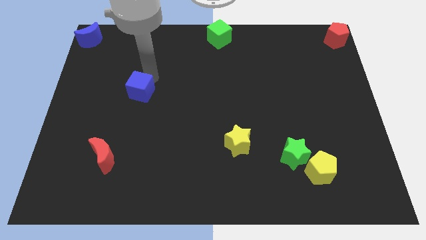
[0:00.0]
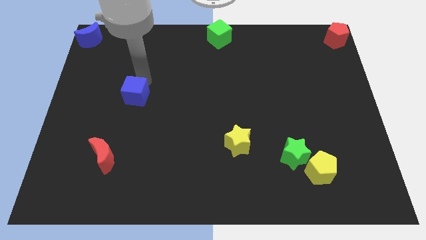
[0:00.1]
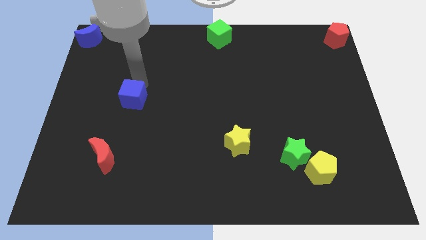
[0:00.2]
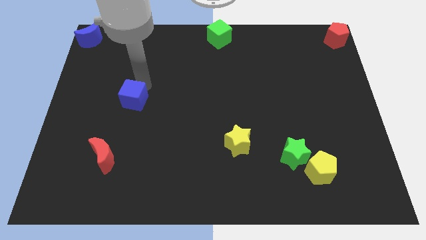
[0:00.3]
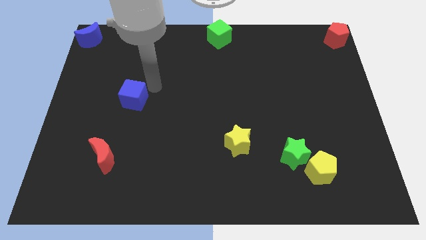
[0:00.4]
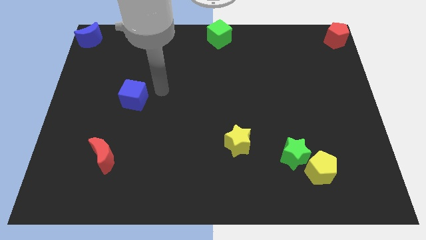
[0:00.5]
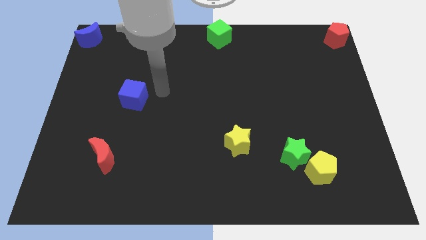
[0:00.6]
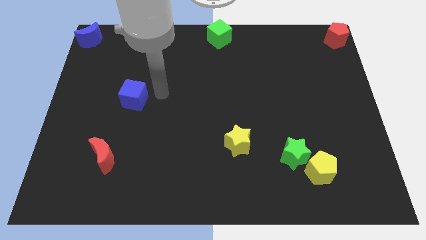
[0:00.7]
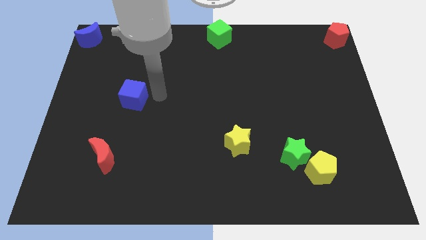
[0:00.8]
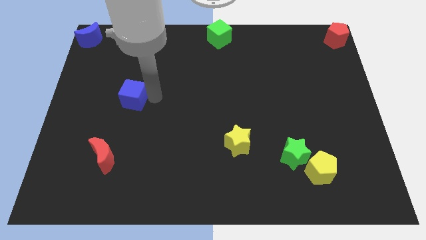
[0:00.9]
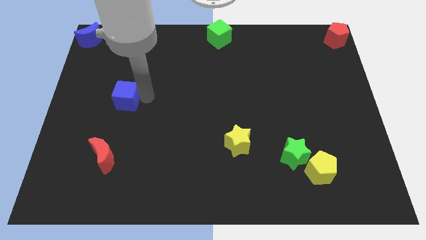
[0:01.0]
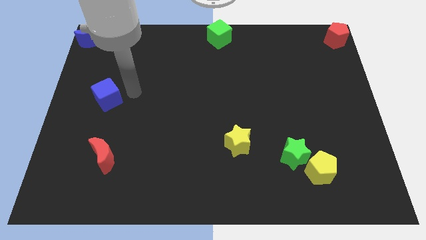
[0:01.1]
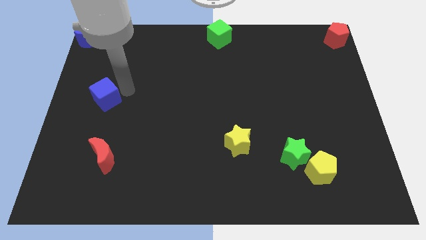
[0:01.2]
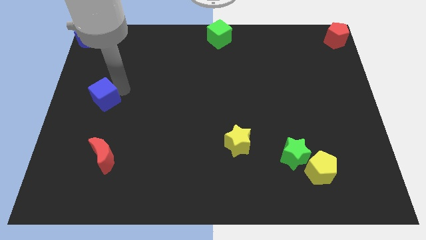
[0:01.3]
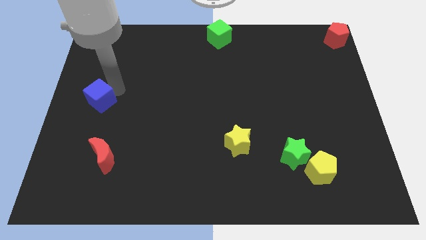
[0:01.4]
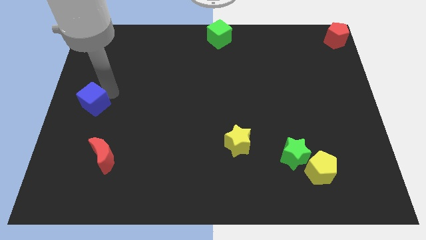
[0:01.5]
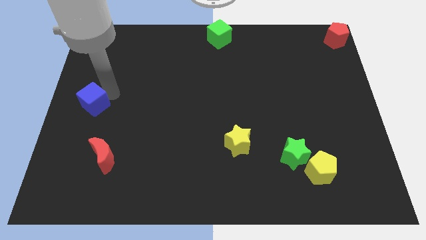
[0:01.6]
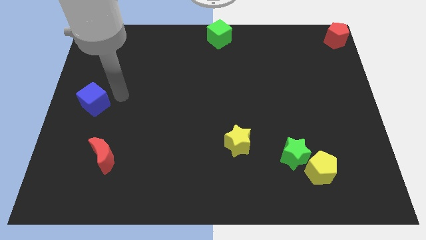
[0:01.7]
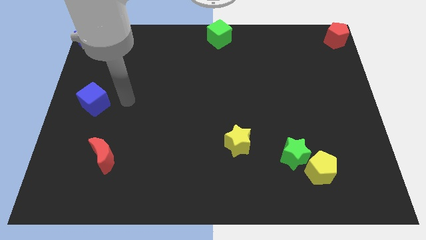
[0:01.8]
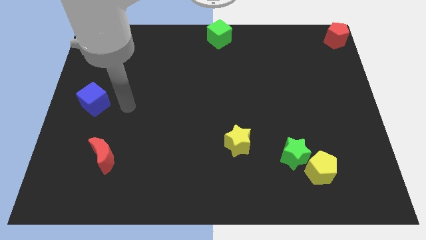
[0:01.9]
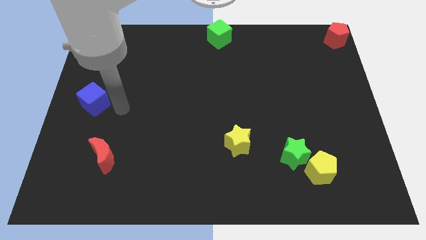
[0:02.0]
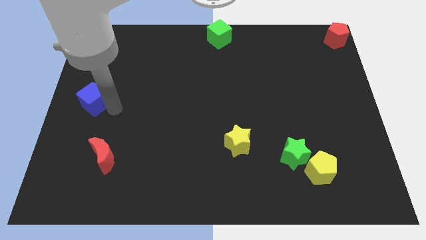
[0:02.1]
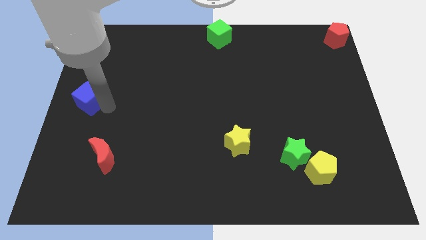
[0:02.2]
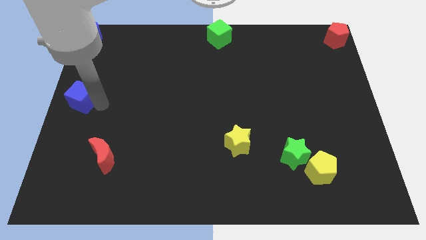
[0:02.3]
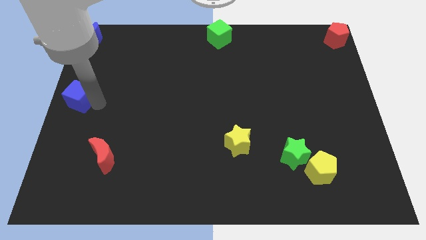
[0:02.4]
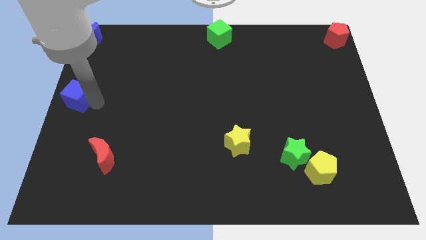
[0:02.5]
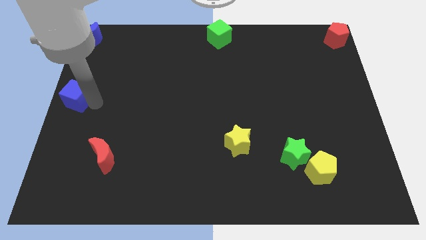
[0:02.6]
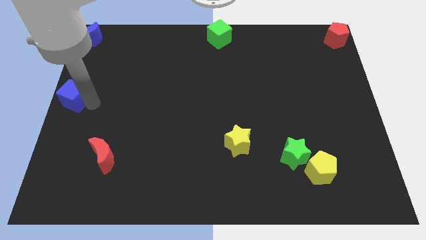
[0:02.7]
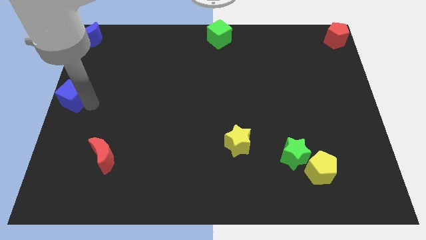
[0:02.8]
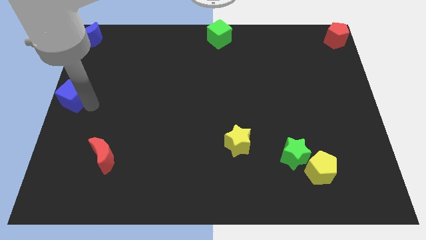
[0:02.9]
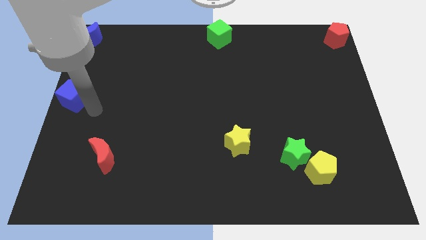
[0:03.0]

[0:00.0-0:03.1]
move the blue cube towards center left side of the board

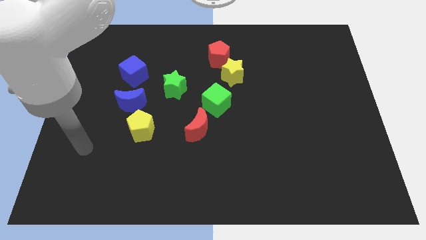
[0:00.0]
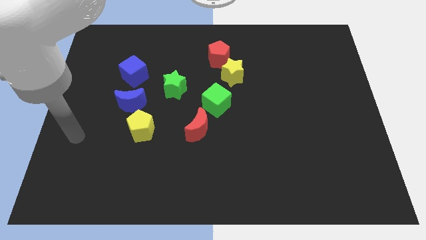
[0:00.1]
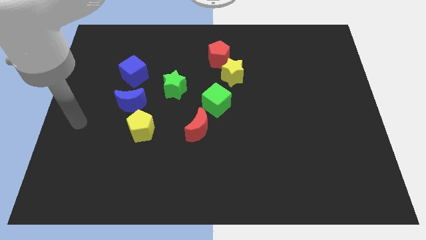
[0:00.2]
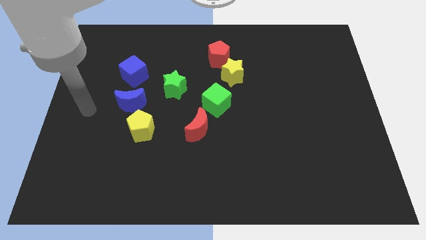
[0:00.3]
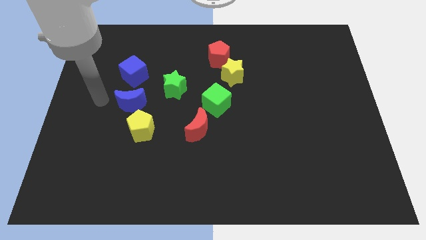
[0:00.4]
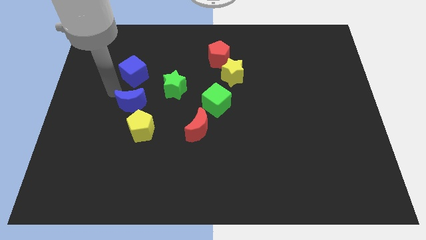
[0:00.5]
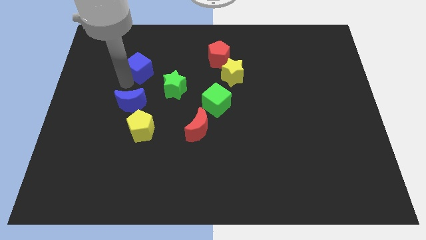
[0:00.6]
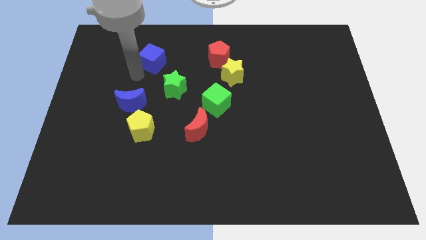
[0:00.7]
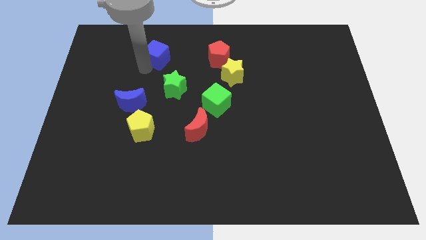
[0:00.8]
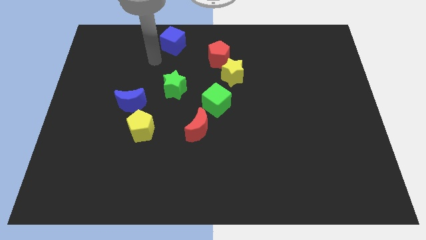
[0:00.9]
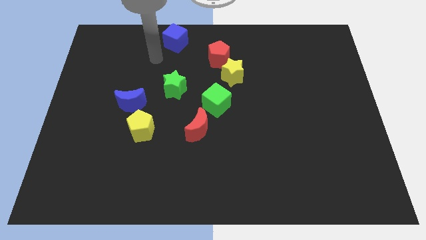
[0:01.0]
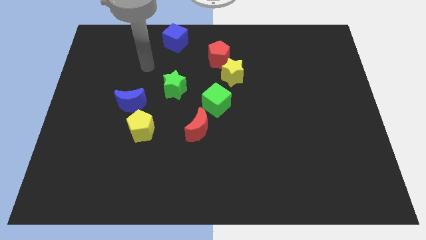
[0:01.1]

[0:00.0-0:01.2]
push the blue cube towards the top center

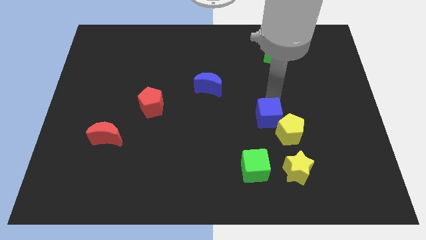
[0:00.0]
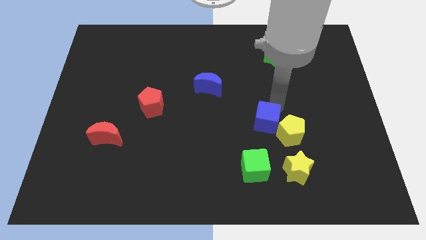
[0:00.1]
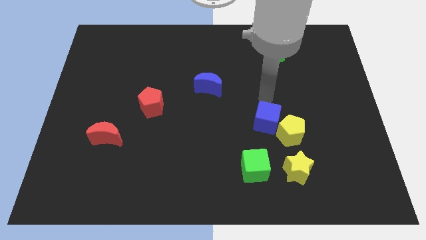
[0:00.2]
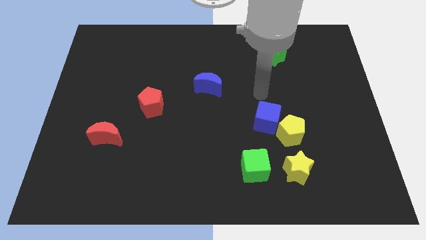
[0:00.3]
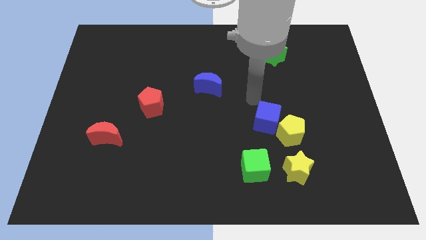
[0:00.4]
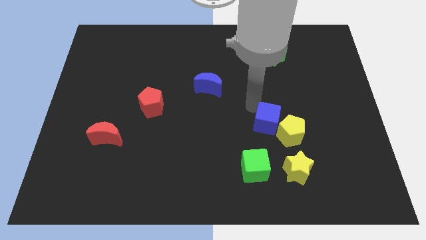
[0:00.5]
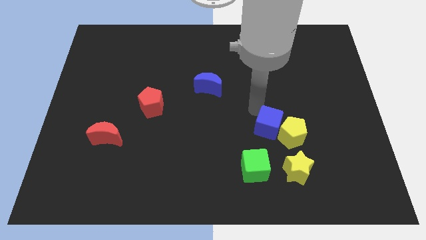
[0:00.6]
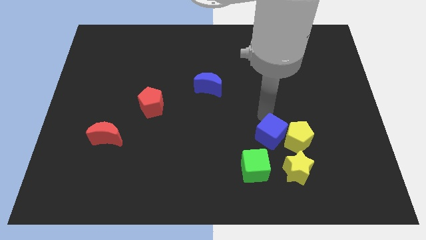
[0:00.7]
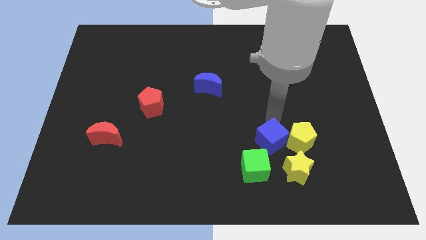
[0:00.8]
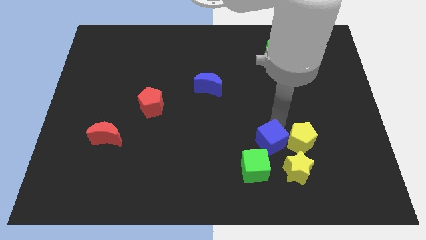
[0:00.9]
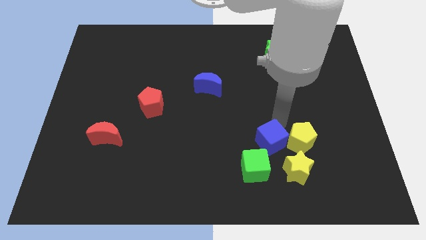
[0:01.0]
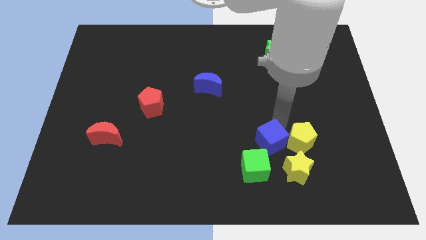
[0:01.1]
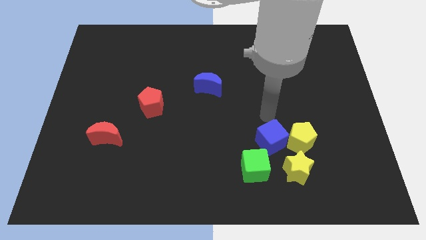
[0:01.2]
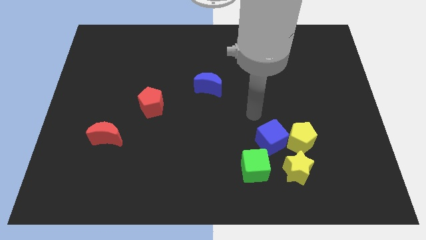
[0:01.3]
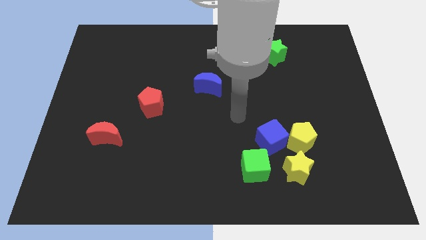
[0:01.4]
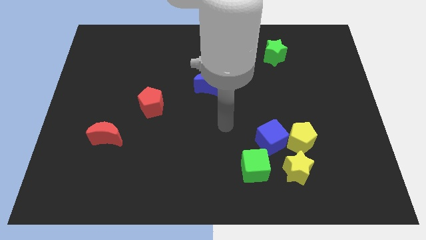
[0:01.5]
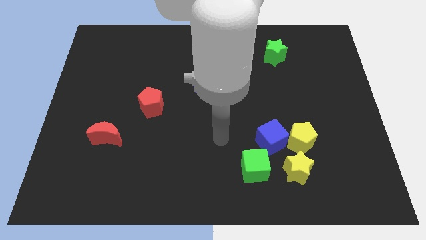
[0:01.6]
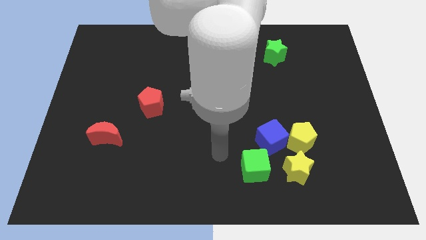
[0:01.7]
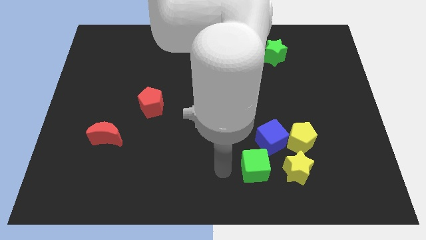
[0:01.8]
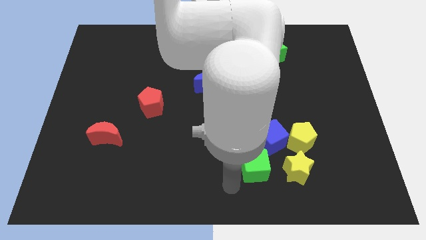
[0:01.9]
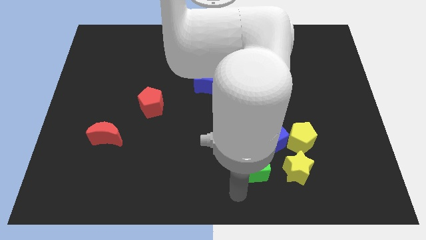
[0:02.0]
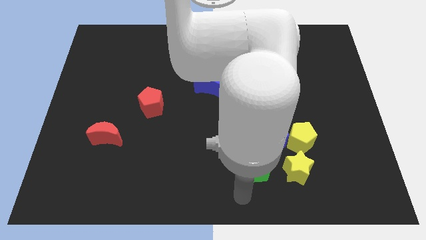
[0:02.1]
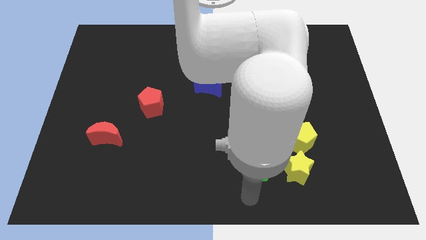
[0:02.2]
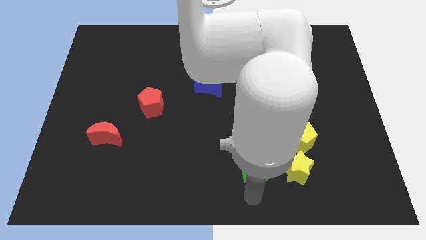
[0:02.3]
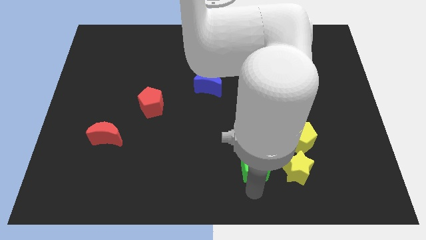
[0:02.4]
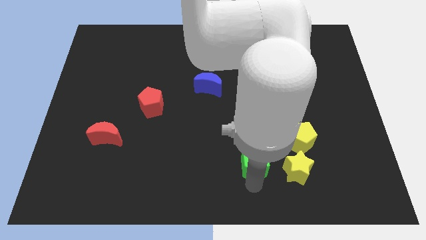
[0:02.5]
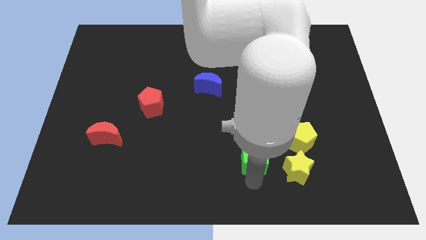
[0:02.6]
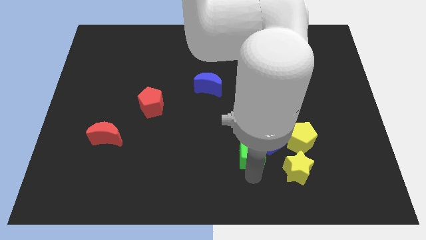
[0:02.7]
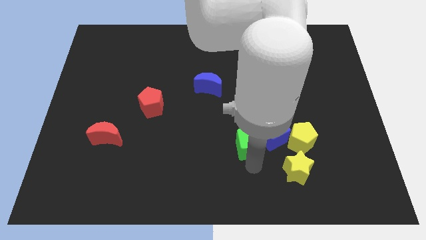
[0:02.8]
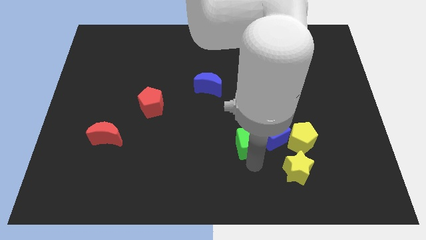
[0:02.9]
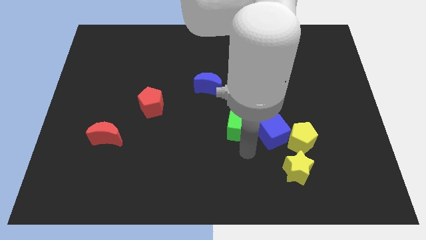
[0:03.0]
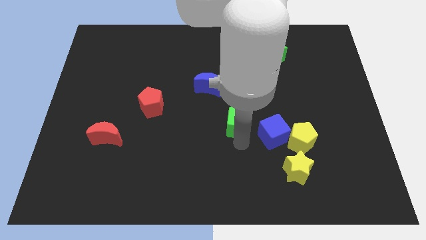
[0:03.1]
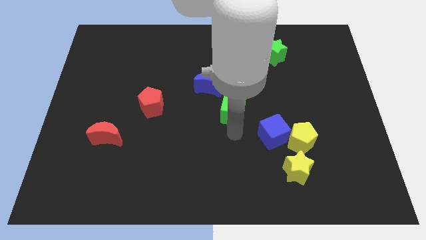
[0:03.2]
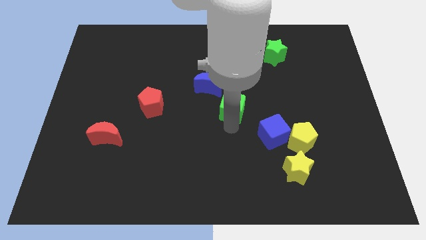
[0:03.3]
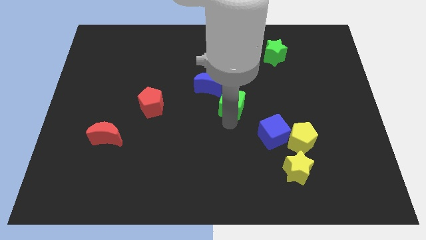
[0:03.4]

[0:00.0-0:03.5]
push the green cube to the bottom right side of the blue moon

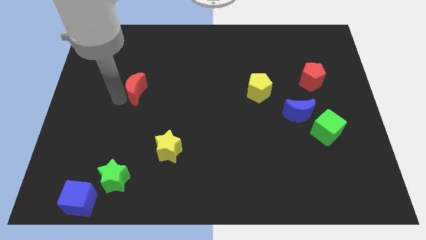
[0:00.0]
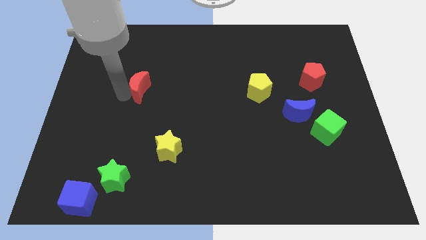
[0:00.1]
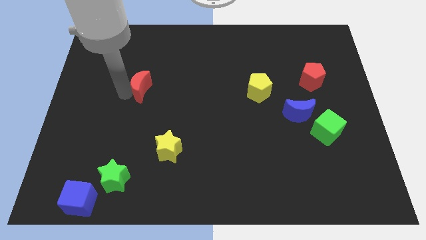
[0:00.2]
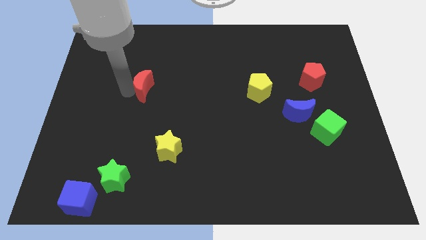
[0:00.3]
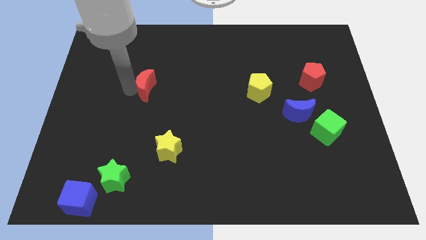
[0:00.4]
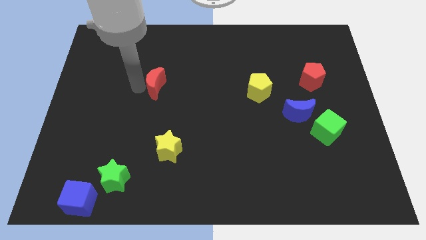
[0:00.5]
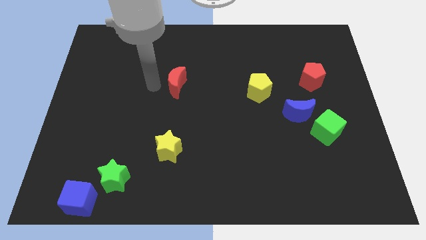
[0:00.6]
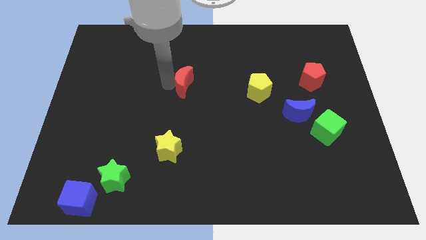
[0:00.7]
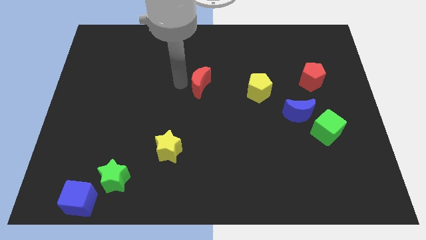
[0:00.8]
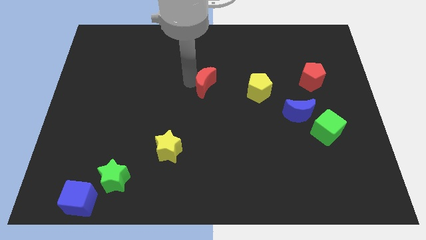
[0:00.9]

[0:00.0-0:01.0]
place the red moon at the center of the board
